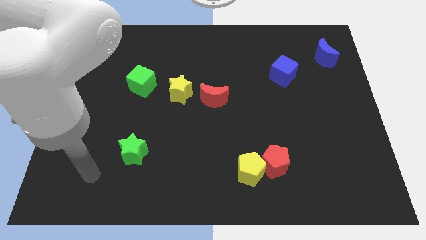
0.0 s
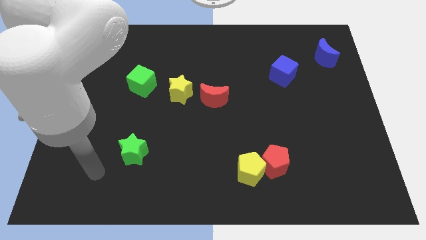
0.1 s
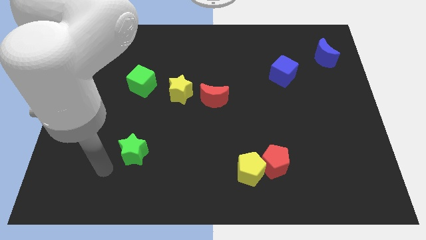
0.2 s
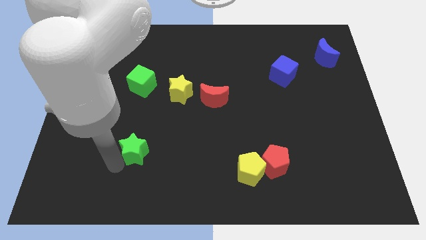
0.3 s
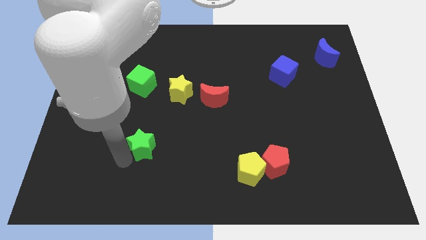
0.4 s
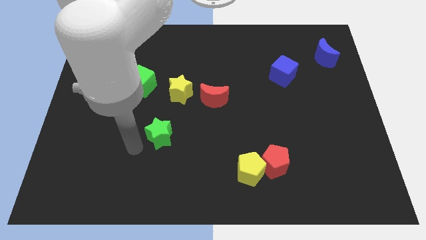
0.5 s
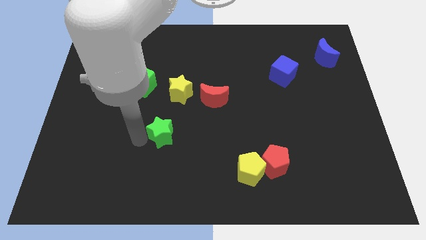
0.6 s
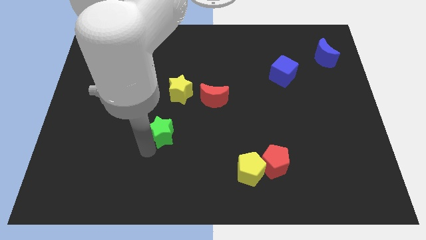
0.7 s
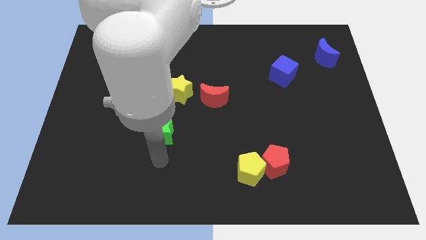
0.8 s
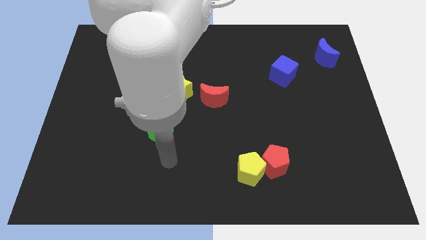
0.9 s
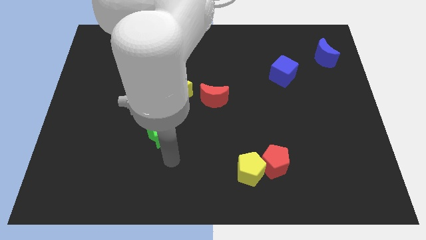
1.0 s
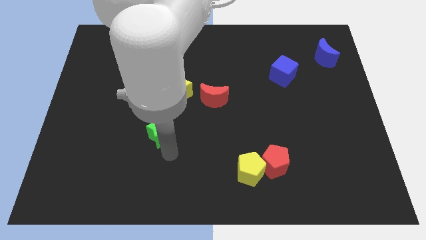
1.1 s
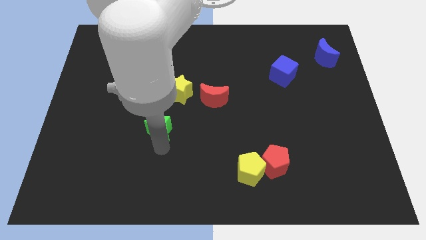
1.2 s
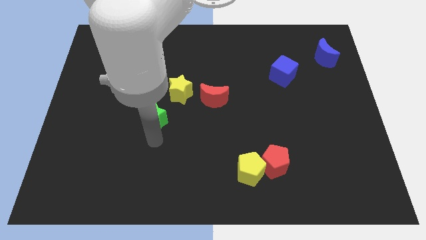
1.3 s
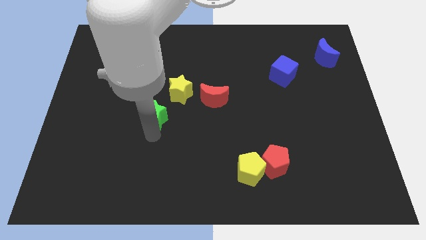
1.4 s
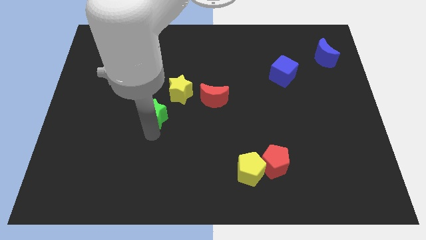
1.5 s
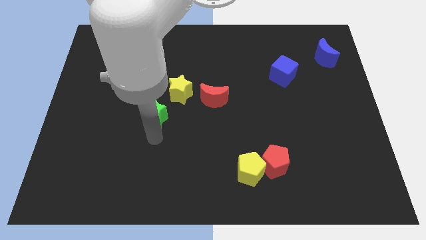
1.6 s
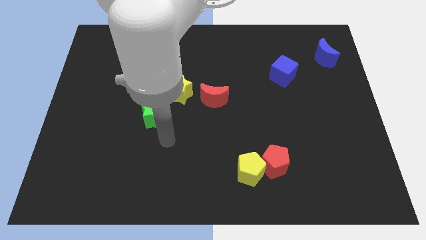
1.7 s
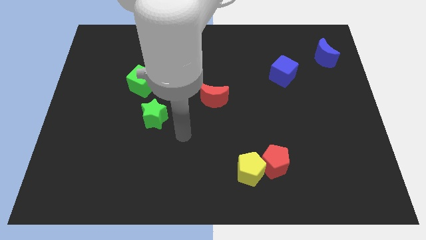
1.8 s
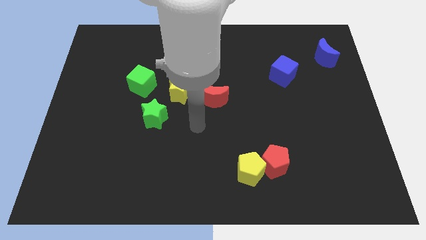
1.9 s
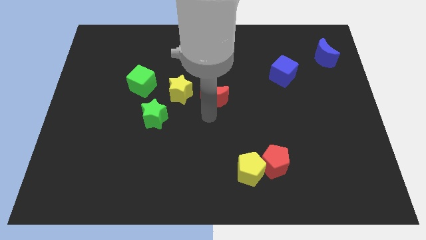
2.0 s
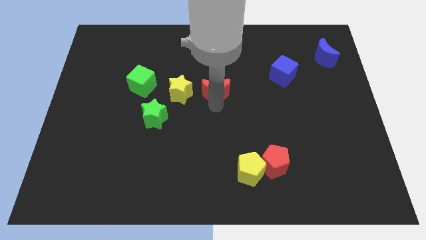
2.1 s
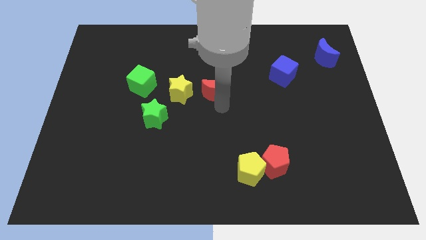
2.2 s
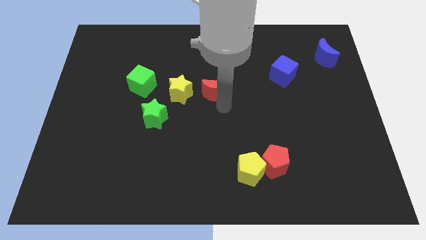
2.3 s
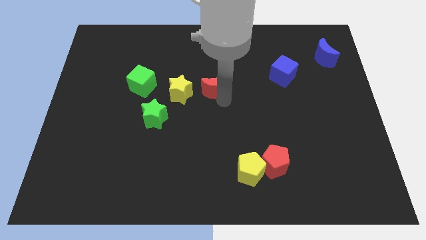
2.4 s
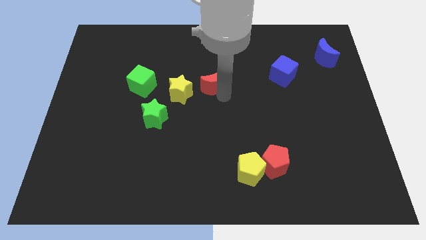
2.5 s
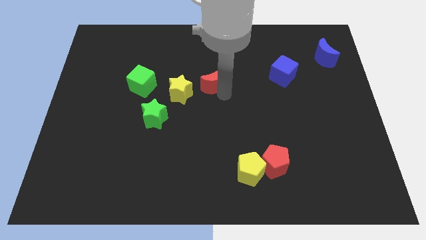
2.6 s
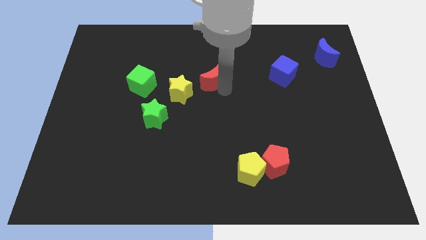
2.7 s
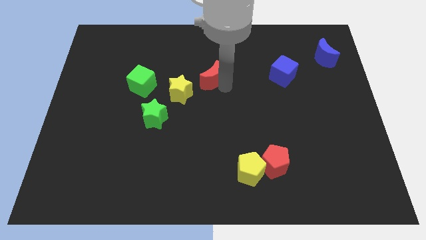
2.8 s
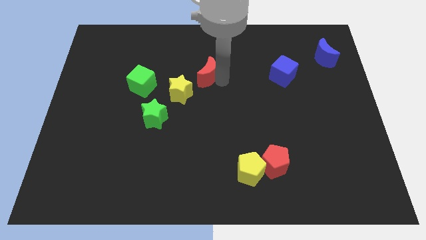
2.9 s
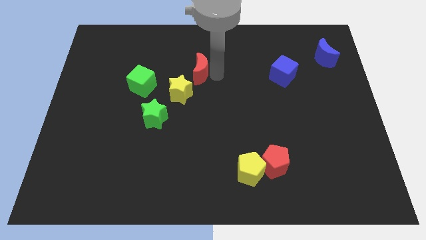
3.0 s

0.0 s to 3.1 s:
slide green star diagonal with yellow star

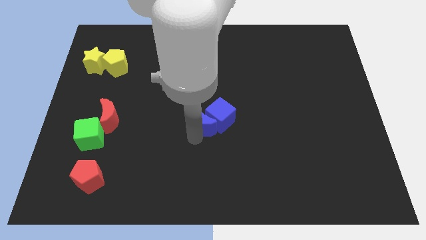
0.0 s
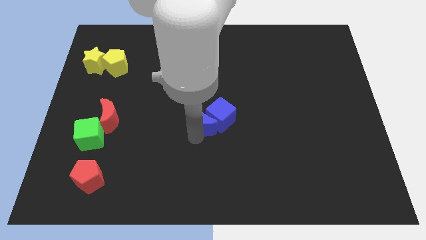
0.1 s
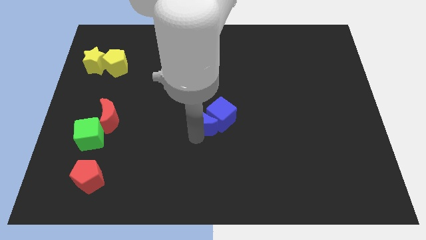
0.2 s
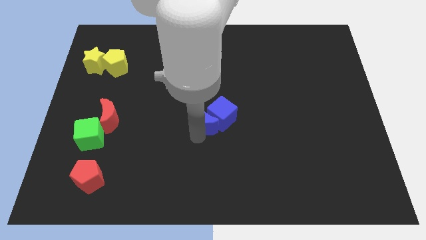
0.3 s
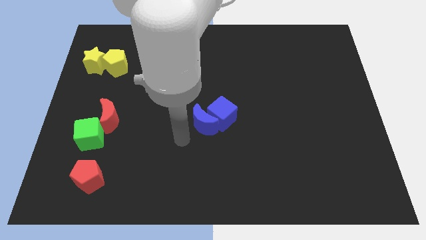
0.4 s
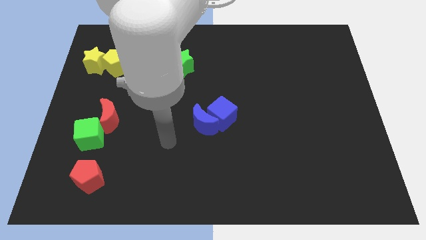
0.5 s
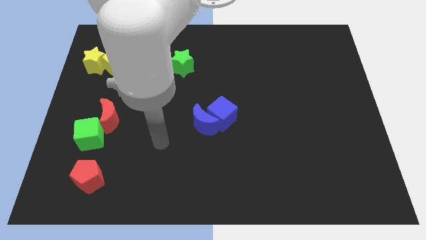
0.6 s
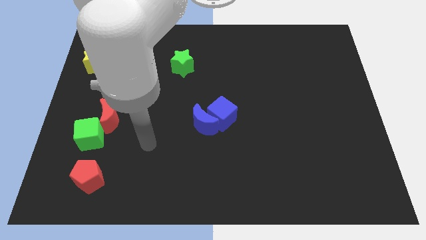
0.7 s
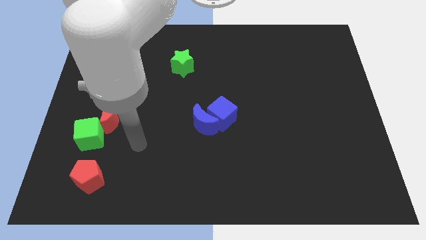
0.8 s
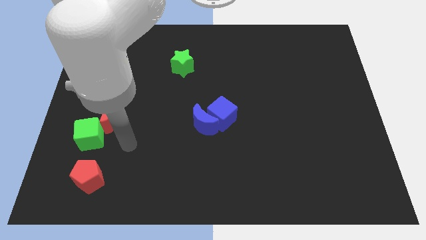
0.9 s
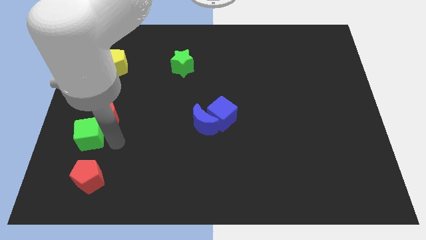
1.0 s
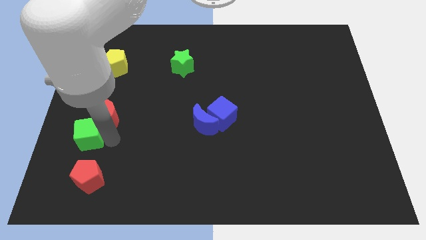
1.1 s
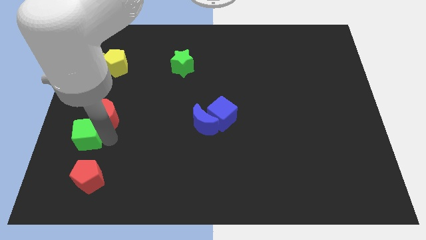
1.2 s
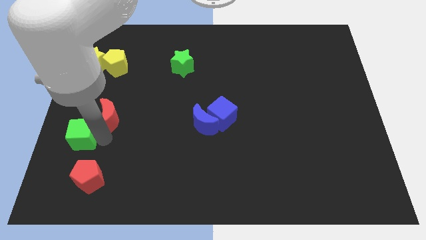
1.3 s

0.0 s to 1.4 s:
push the green cube slightly to the left

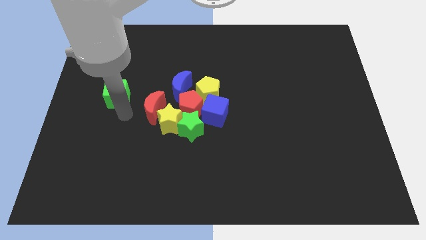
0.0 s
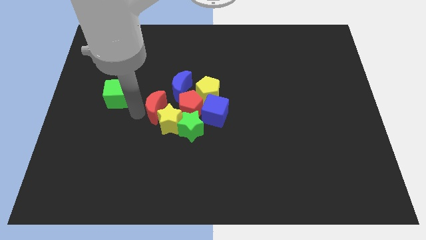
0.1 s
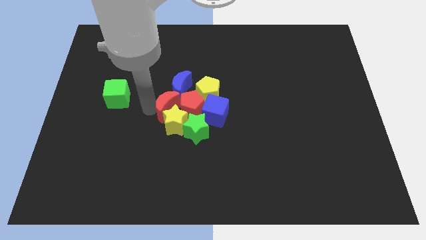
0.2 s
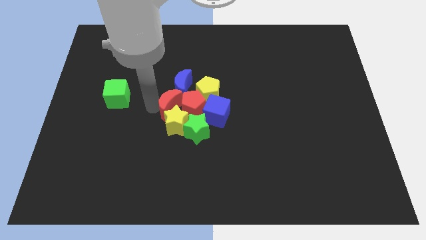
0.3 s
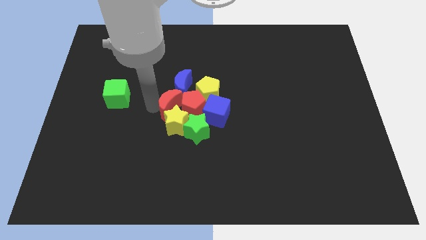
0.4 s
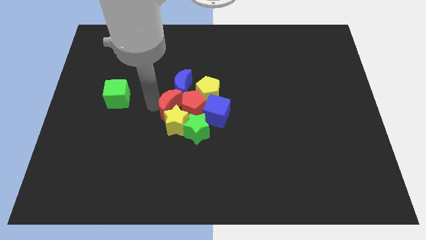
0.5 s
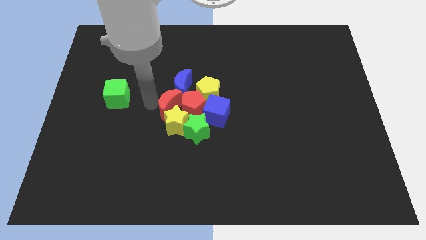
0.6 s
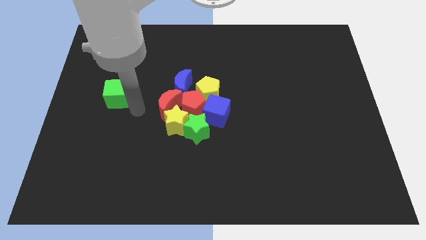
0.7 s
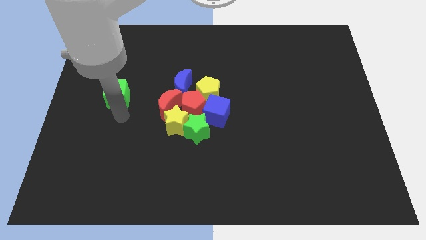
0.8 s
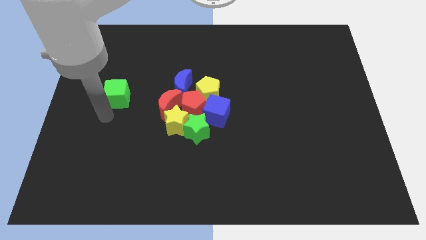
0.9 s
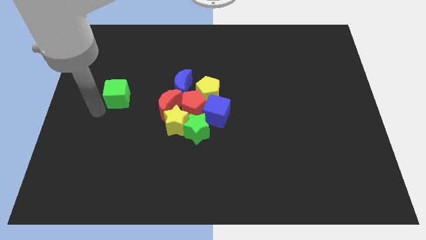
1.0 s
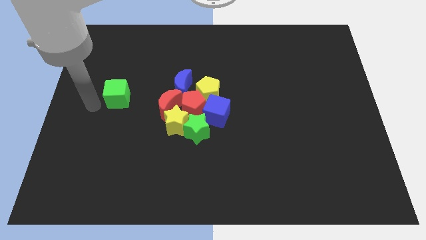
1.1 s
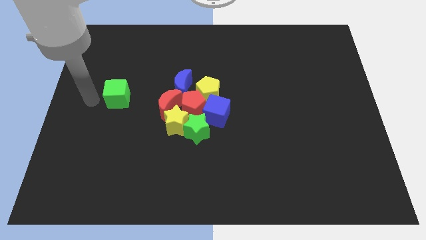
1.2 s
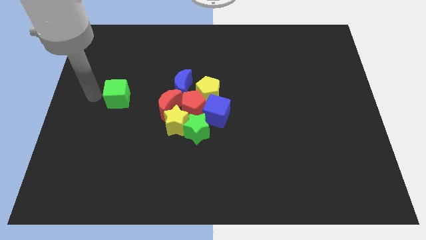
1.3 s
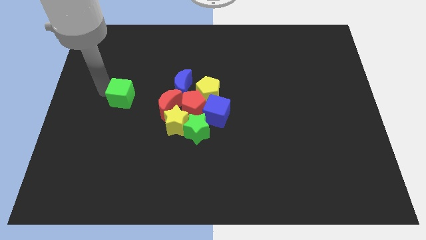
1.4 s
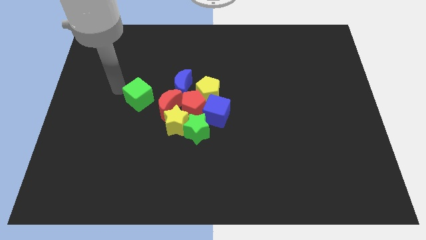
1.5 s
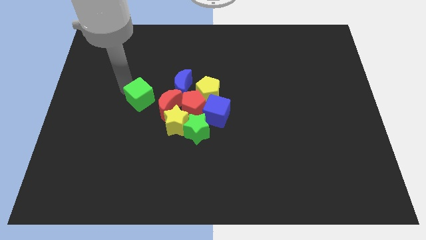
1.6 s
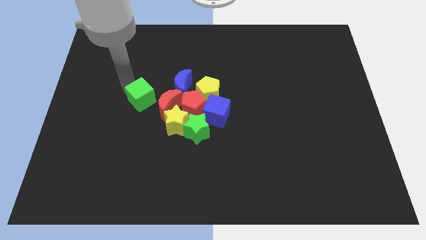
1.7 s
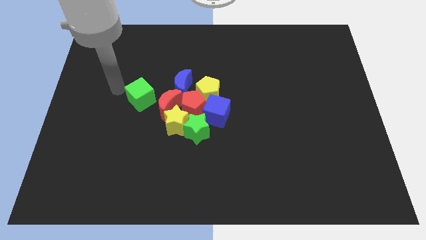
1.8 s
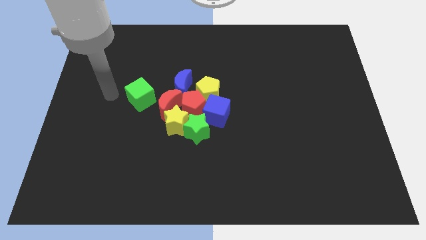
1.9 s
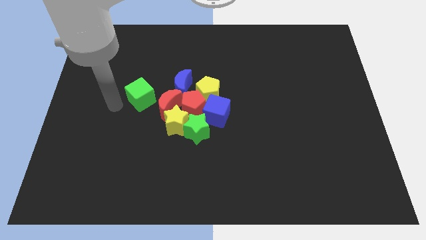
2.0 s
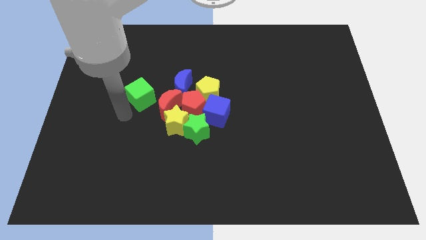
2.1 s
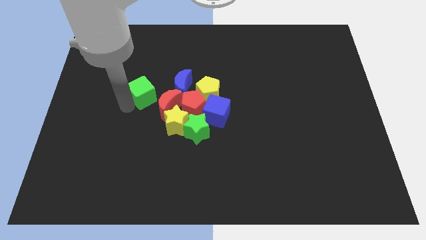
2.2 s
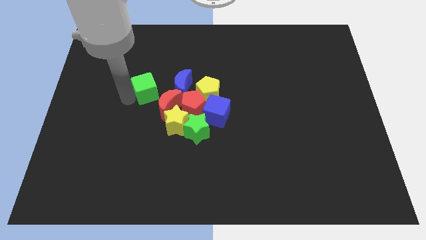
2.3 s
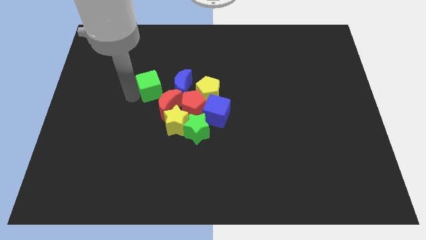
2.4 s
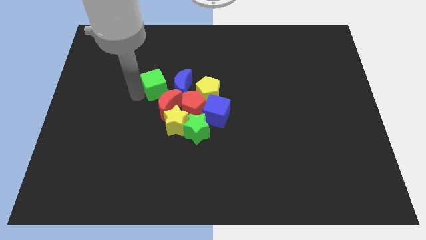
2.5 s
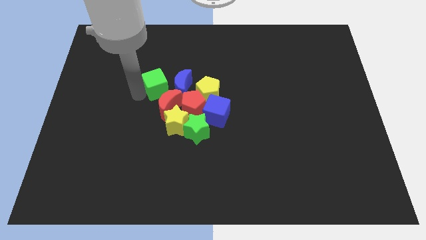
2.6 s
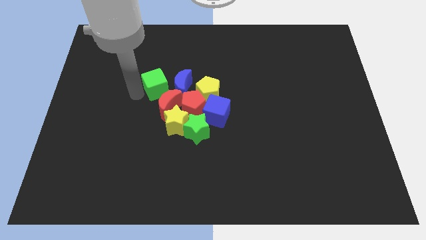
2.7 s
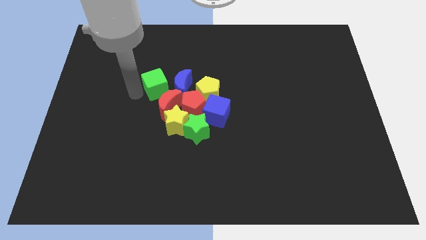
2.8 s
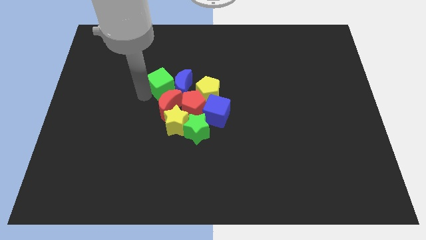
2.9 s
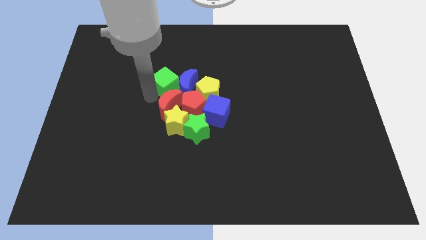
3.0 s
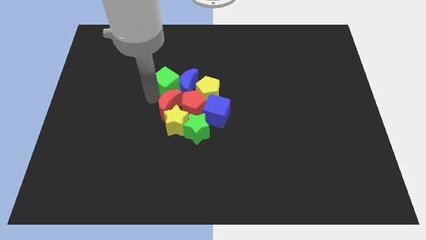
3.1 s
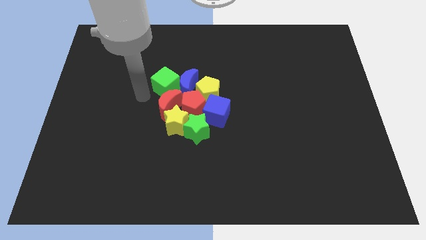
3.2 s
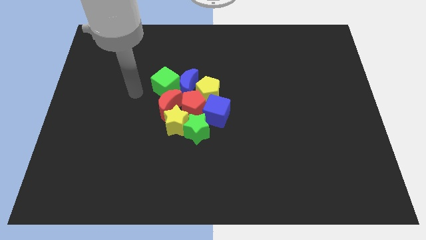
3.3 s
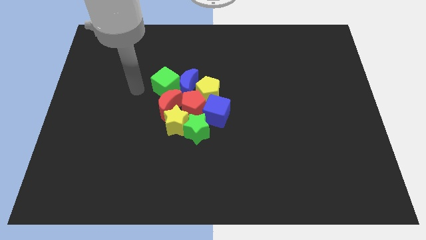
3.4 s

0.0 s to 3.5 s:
place the green cube left to the blue moon

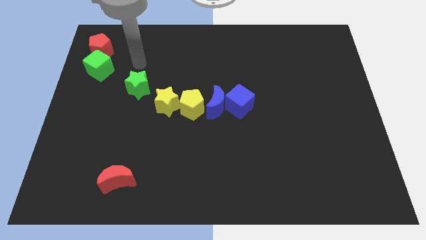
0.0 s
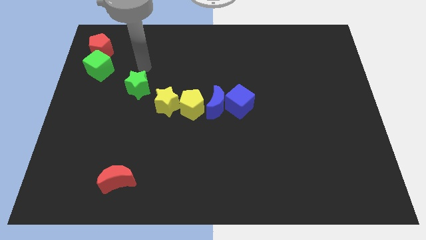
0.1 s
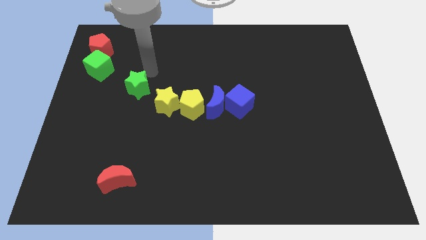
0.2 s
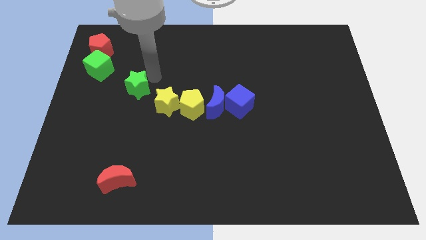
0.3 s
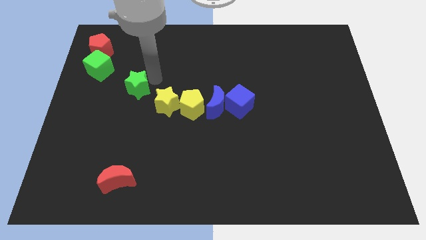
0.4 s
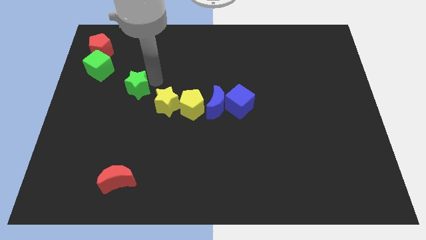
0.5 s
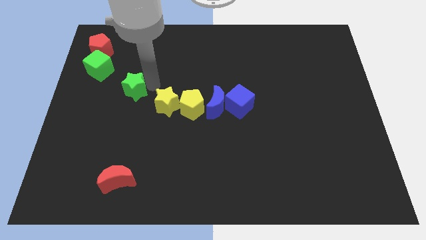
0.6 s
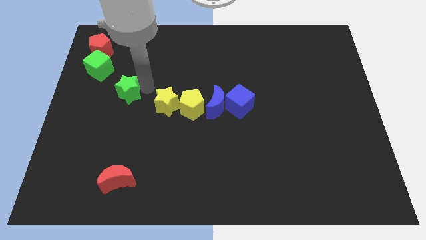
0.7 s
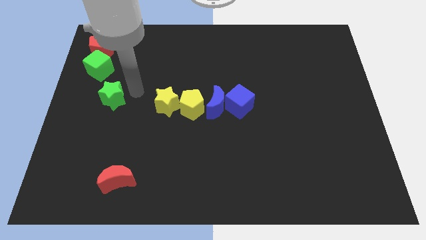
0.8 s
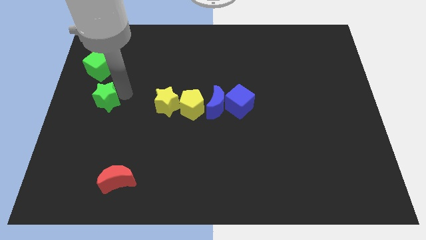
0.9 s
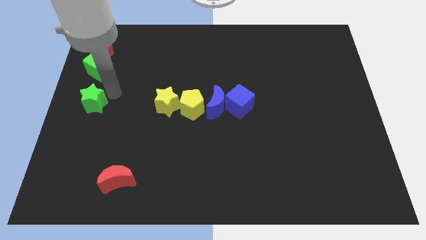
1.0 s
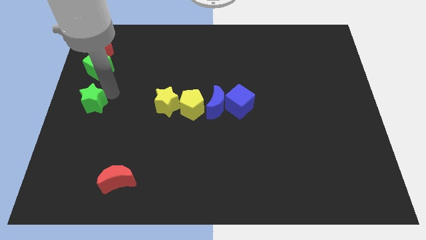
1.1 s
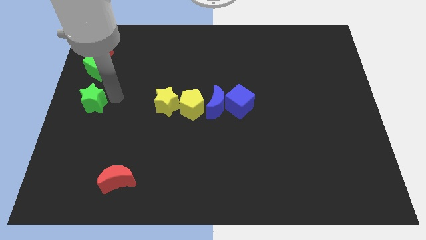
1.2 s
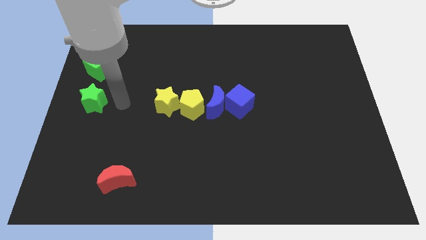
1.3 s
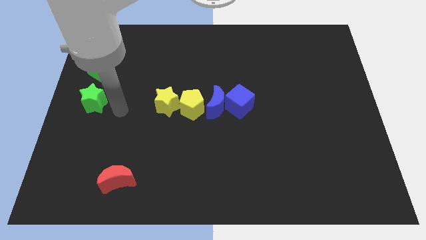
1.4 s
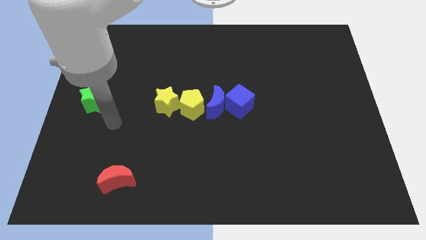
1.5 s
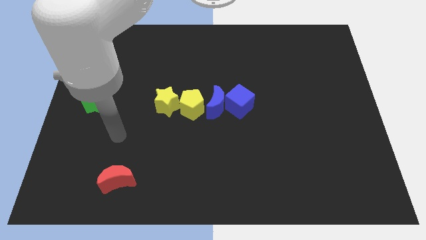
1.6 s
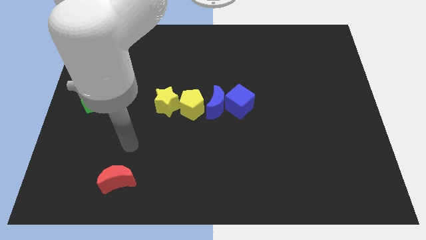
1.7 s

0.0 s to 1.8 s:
move green star slightly to the left center
